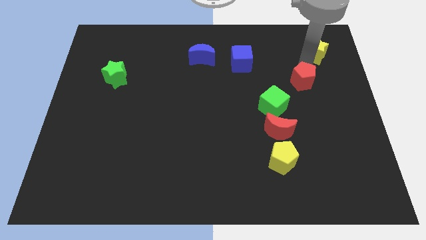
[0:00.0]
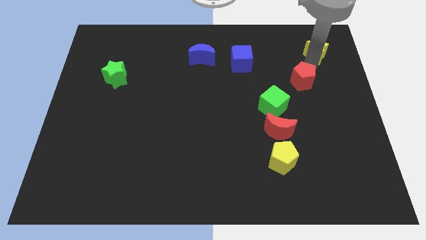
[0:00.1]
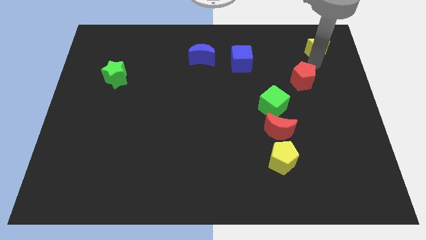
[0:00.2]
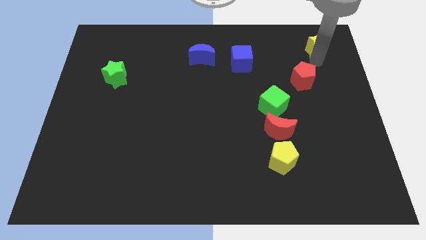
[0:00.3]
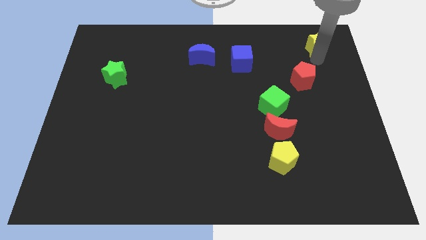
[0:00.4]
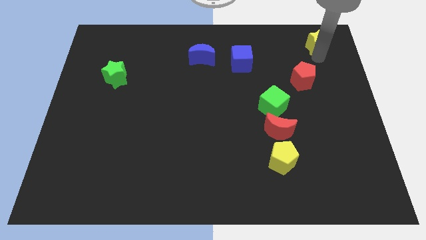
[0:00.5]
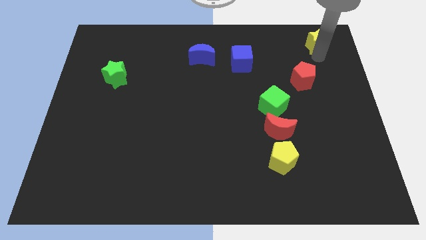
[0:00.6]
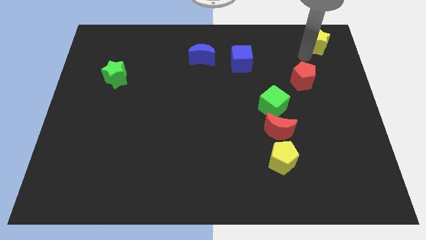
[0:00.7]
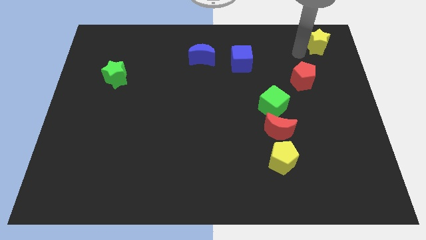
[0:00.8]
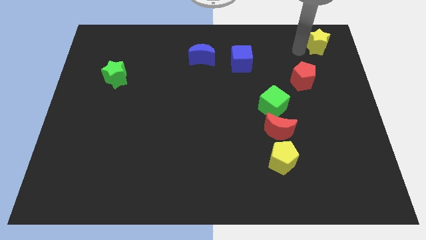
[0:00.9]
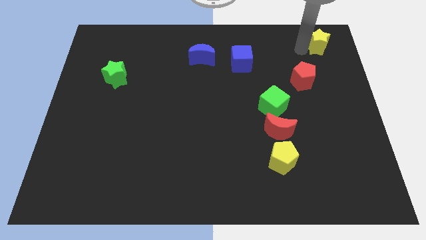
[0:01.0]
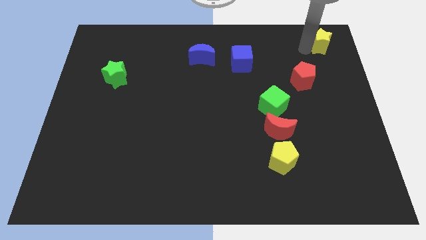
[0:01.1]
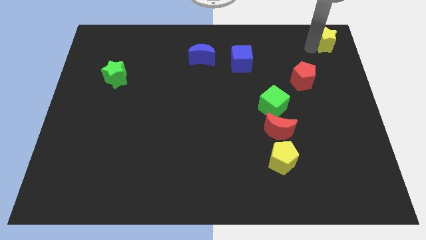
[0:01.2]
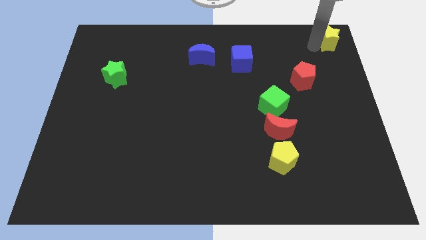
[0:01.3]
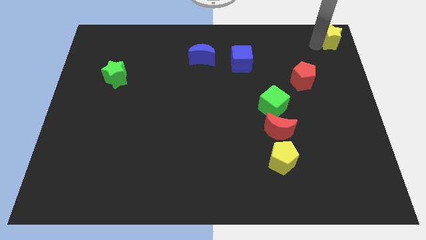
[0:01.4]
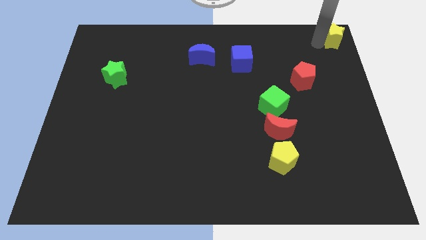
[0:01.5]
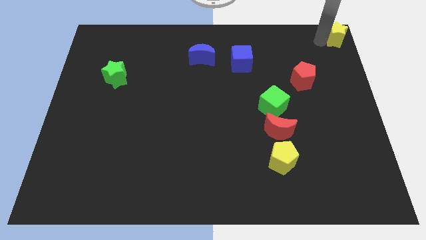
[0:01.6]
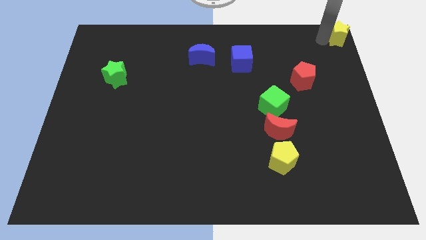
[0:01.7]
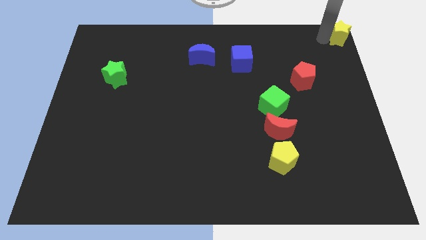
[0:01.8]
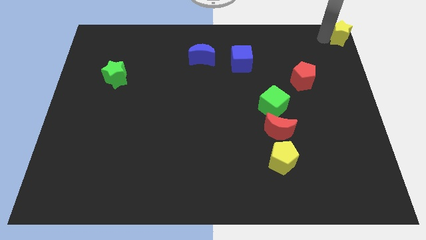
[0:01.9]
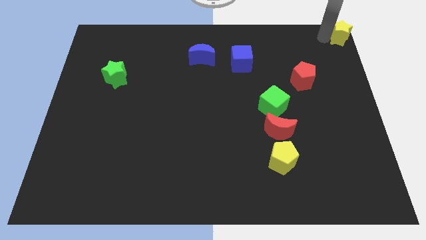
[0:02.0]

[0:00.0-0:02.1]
slide yellow star to the top right

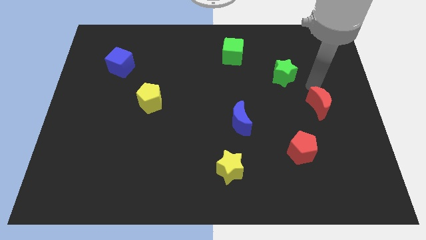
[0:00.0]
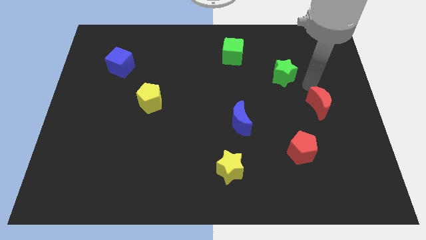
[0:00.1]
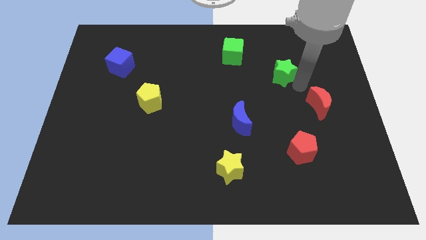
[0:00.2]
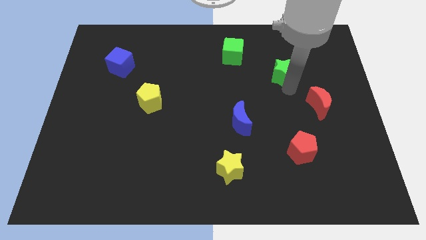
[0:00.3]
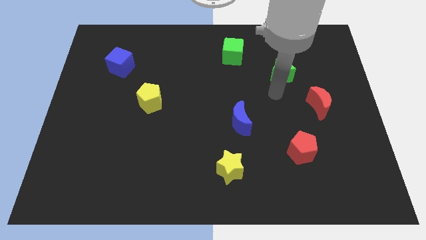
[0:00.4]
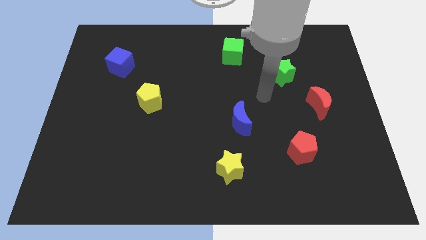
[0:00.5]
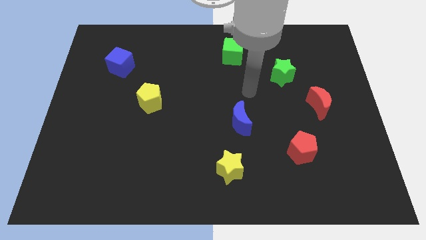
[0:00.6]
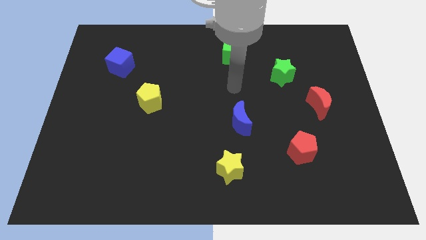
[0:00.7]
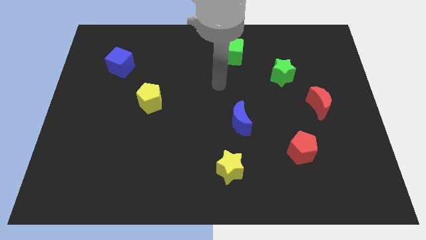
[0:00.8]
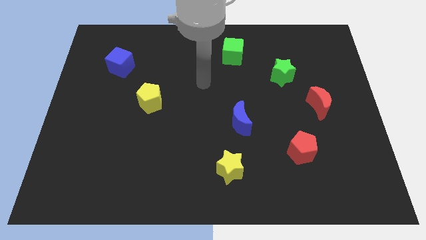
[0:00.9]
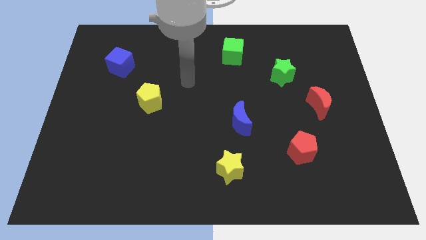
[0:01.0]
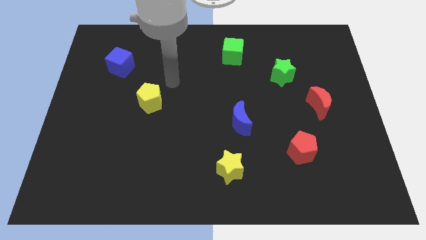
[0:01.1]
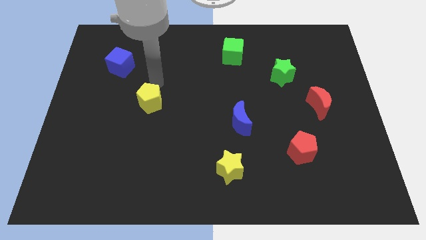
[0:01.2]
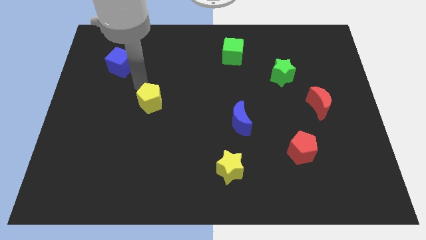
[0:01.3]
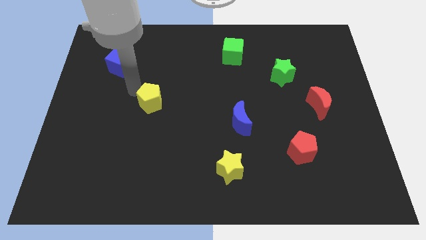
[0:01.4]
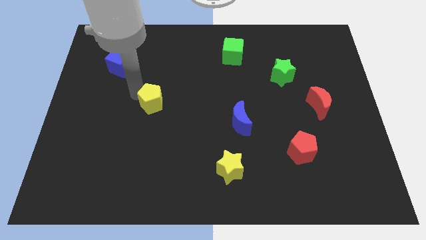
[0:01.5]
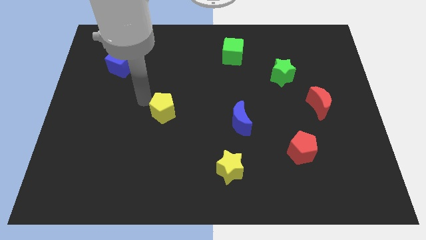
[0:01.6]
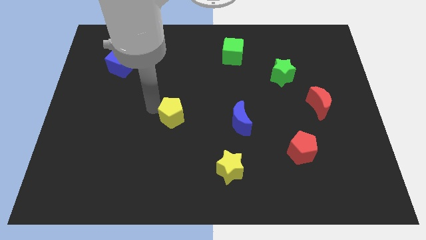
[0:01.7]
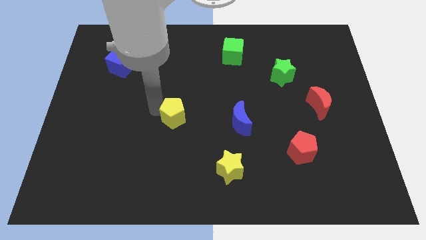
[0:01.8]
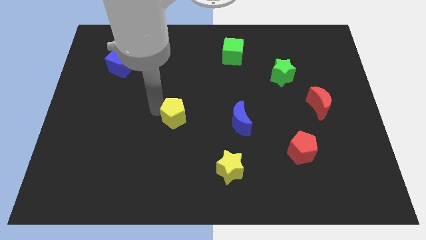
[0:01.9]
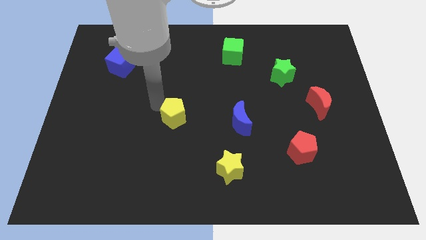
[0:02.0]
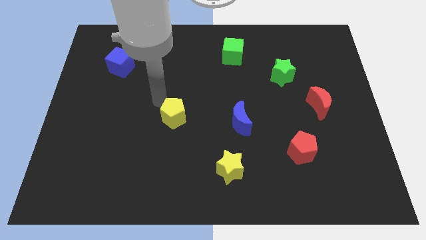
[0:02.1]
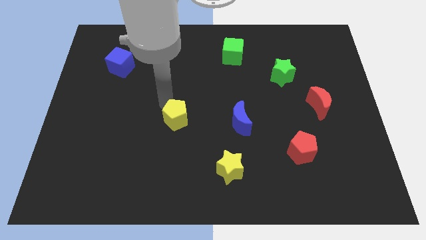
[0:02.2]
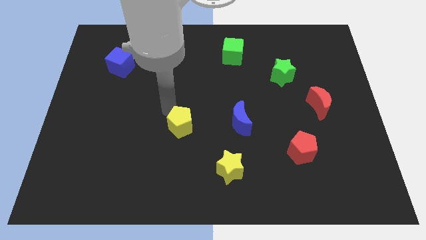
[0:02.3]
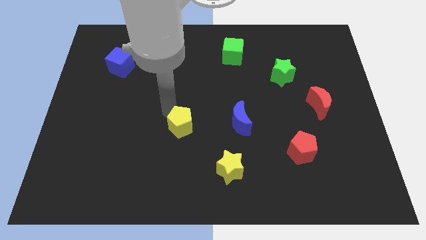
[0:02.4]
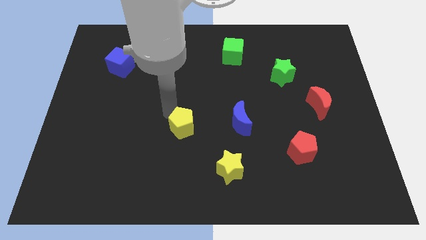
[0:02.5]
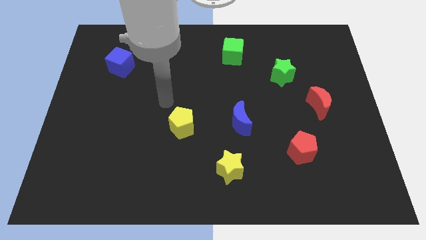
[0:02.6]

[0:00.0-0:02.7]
place the yellow pentagon left to the blue moon

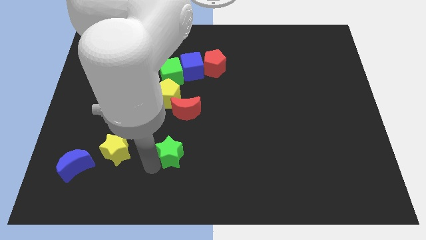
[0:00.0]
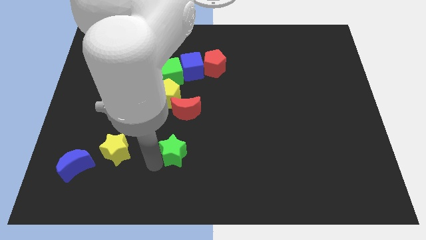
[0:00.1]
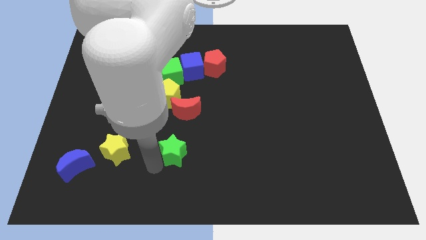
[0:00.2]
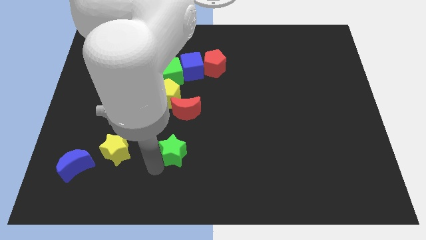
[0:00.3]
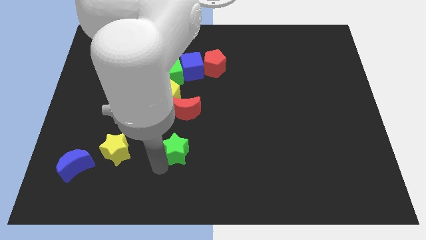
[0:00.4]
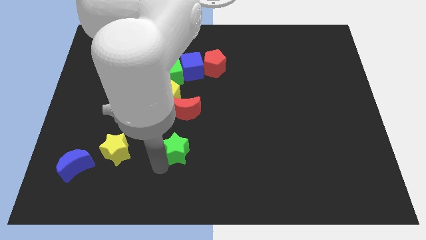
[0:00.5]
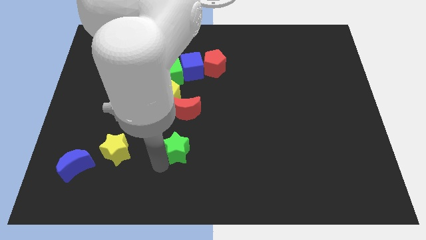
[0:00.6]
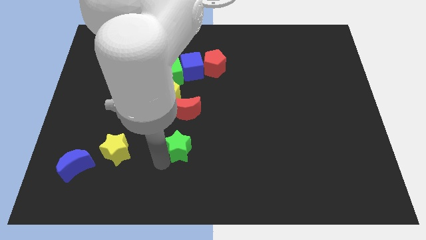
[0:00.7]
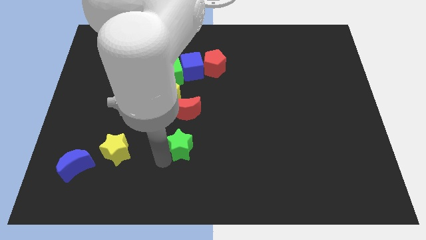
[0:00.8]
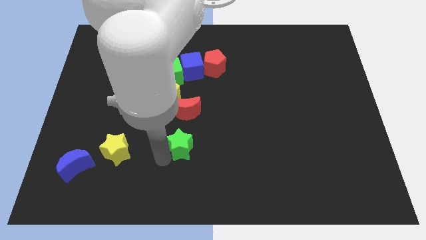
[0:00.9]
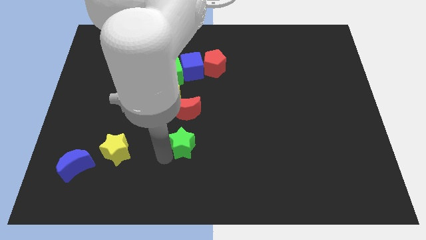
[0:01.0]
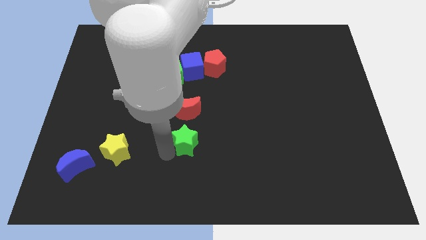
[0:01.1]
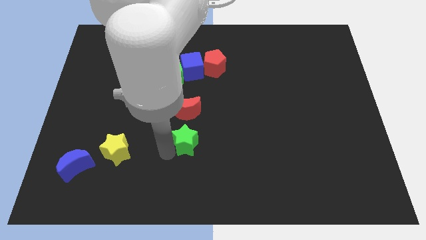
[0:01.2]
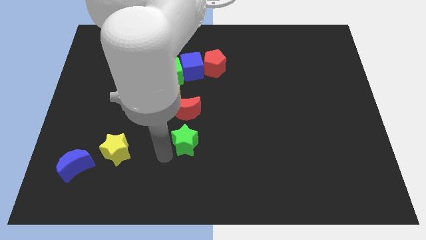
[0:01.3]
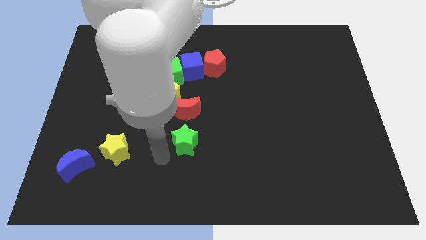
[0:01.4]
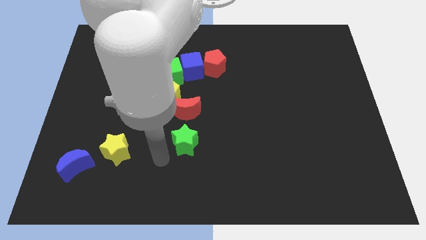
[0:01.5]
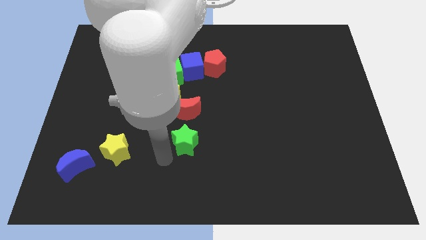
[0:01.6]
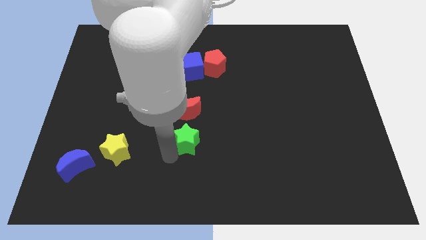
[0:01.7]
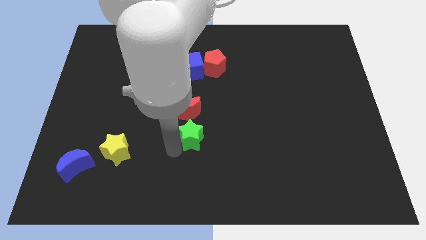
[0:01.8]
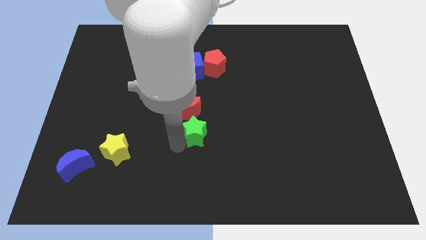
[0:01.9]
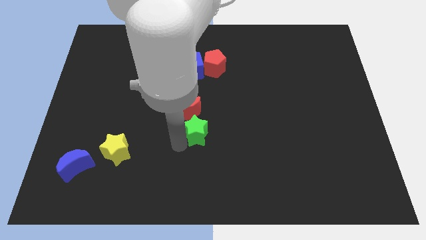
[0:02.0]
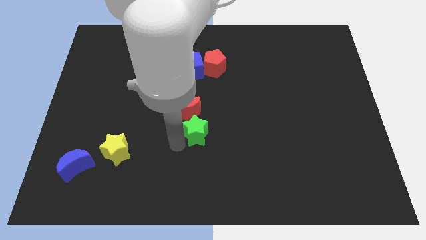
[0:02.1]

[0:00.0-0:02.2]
slide the green star diagonally top right to the yellow star

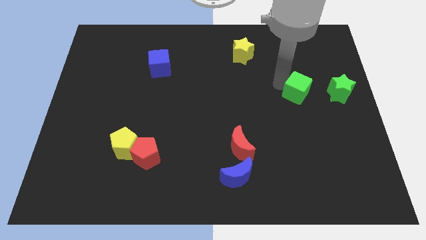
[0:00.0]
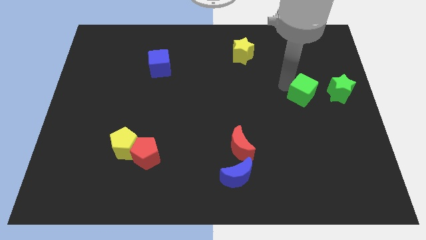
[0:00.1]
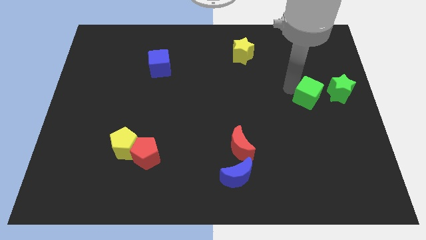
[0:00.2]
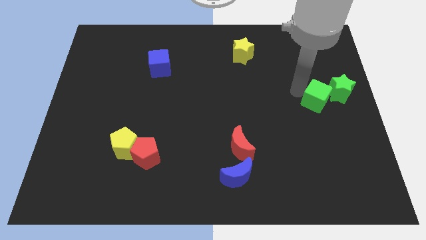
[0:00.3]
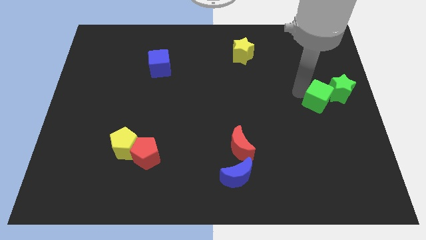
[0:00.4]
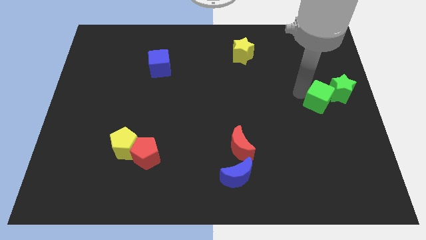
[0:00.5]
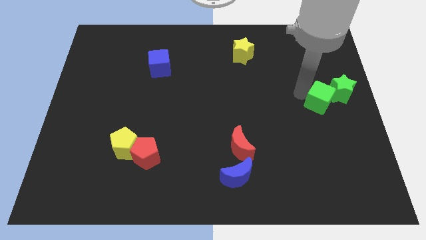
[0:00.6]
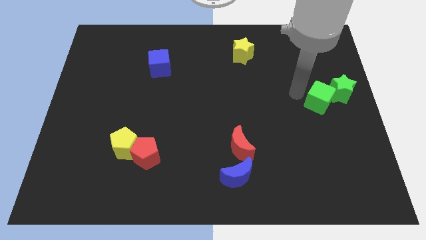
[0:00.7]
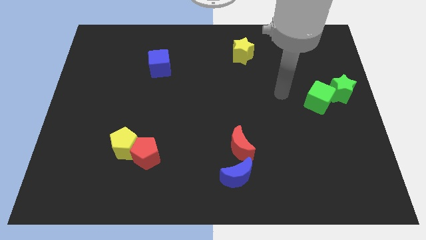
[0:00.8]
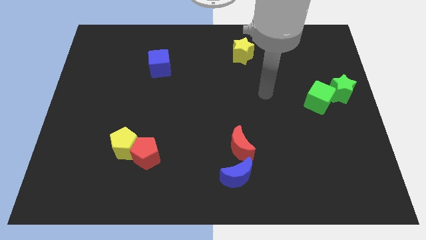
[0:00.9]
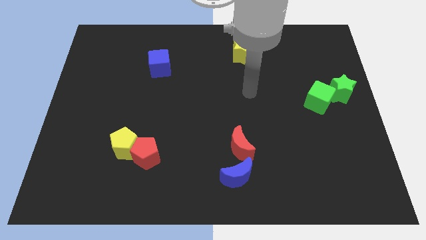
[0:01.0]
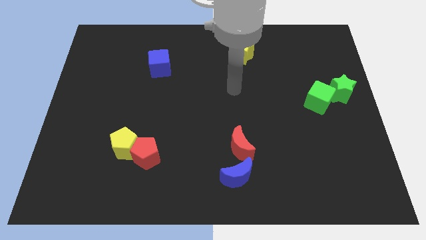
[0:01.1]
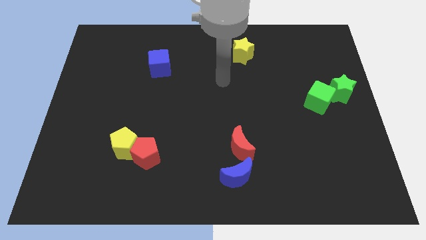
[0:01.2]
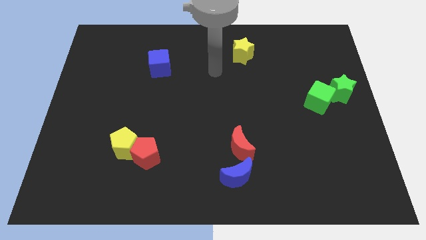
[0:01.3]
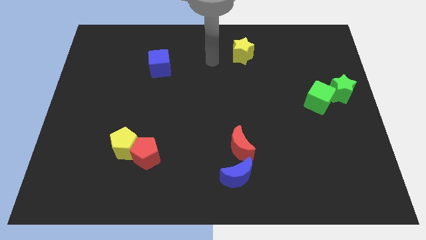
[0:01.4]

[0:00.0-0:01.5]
move the green cube into the green star

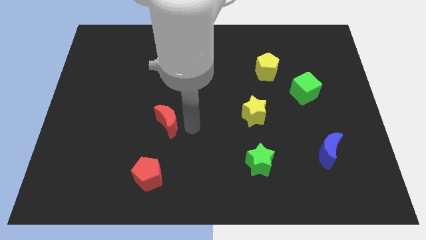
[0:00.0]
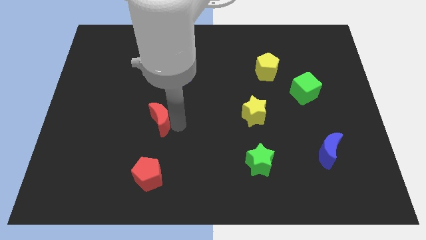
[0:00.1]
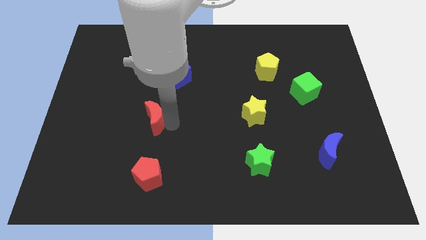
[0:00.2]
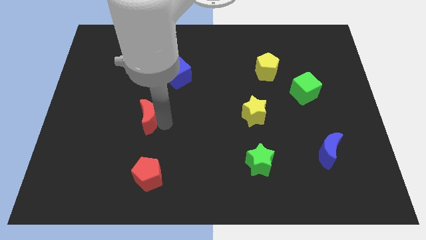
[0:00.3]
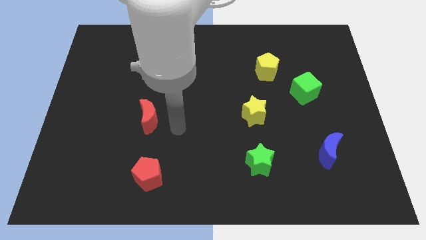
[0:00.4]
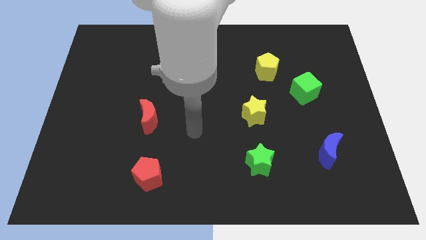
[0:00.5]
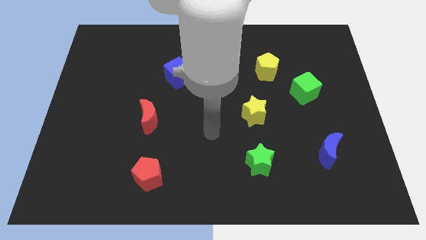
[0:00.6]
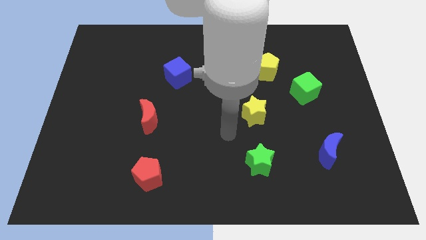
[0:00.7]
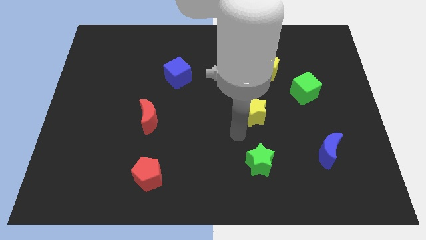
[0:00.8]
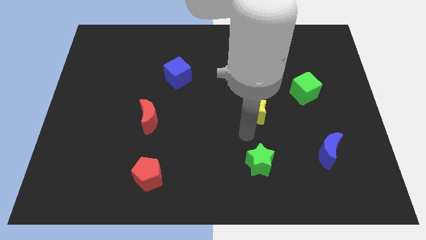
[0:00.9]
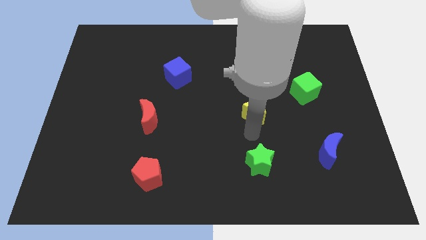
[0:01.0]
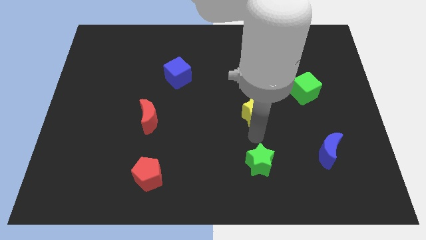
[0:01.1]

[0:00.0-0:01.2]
move red moon above red pentagon
